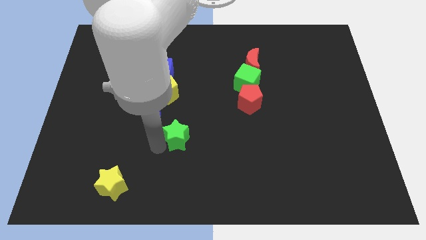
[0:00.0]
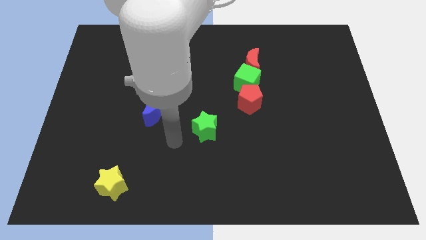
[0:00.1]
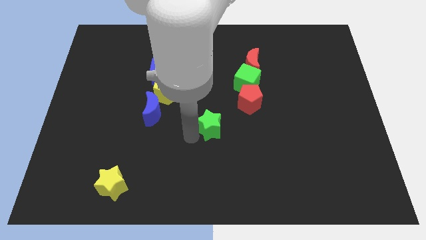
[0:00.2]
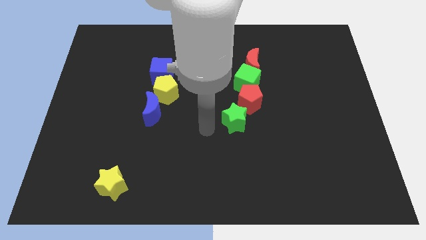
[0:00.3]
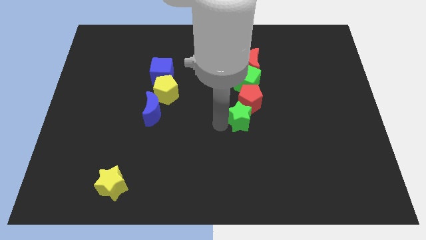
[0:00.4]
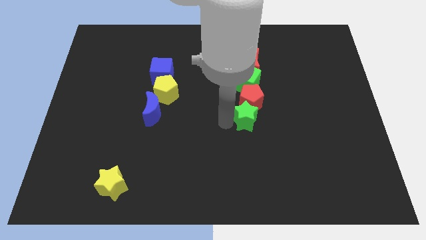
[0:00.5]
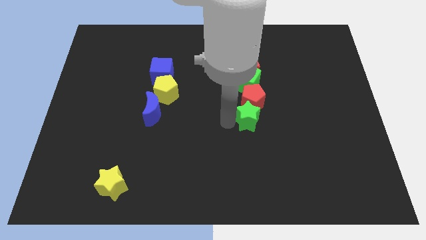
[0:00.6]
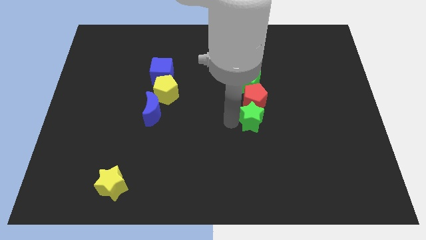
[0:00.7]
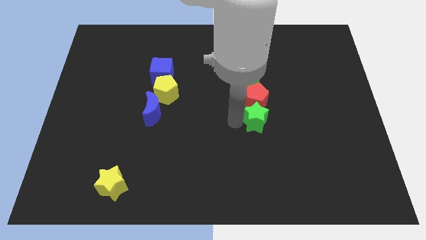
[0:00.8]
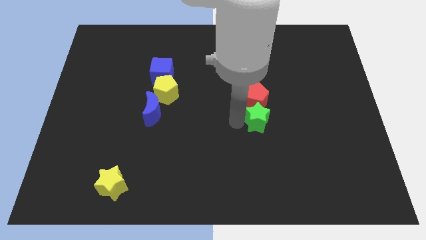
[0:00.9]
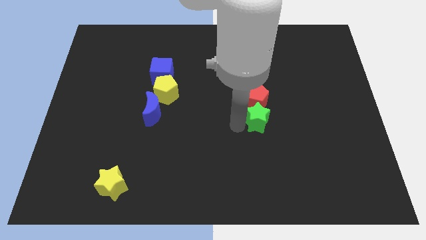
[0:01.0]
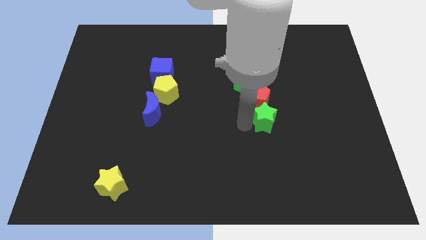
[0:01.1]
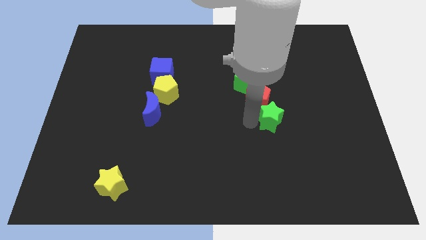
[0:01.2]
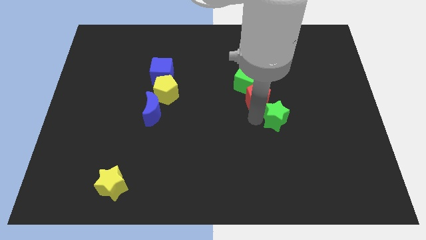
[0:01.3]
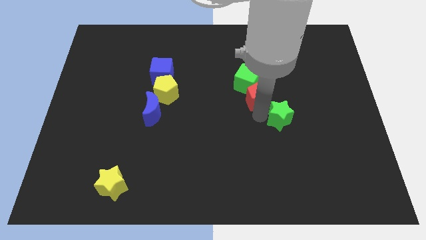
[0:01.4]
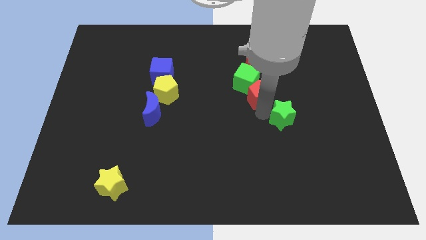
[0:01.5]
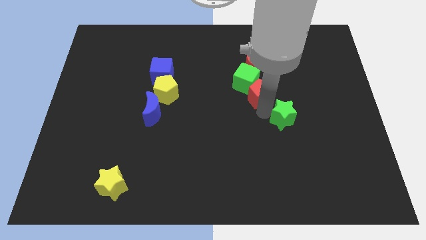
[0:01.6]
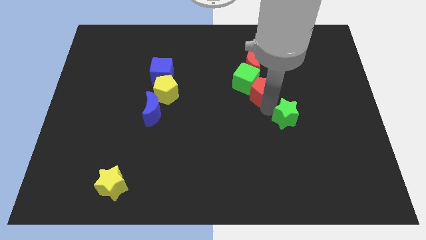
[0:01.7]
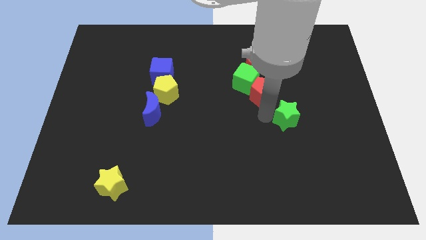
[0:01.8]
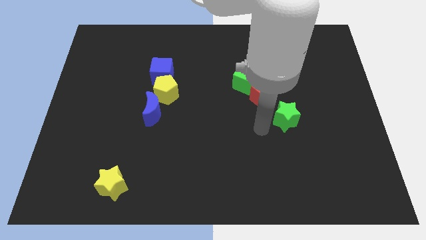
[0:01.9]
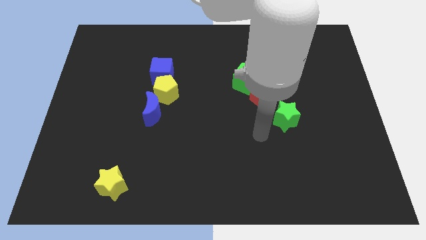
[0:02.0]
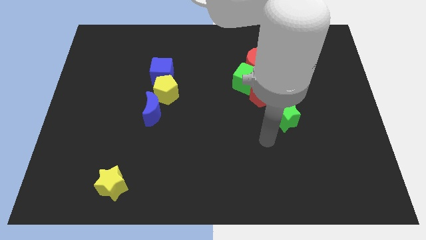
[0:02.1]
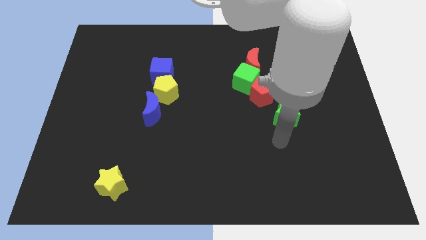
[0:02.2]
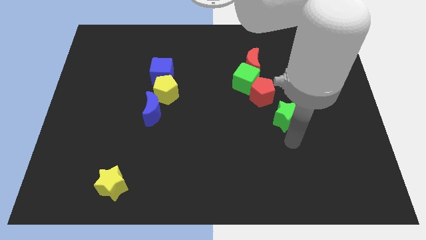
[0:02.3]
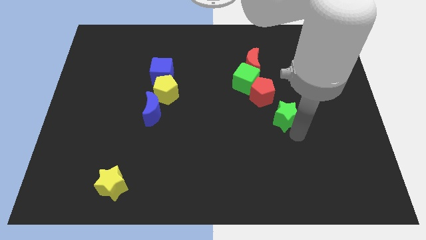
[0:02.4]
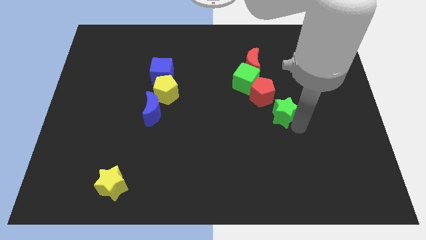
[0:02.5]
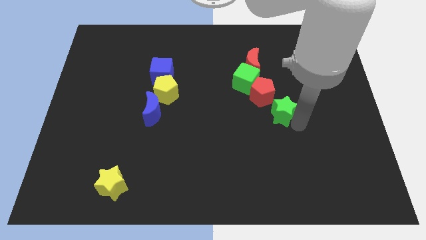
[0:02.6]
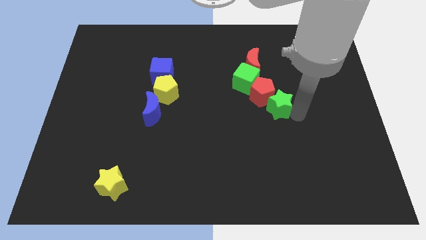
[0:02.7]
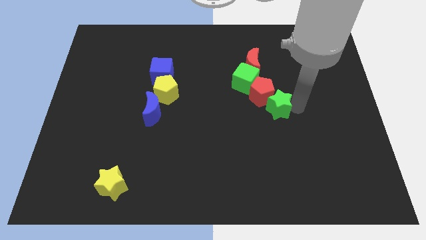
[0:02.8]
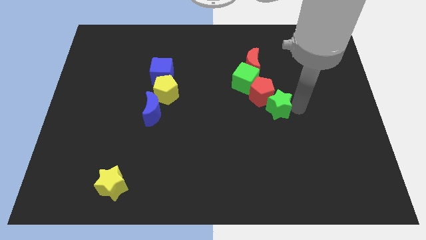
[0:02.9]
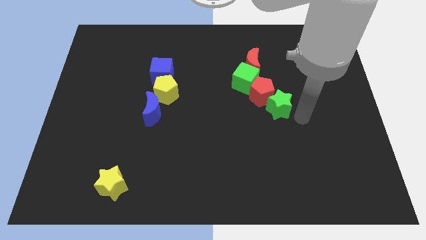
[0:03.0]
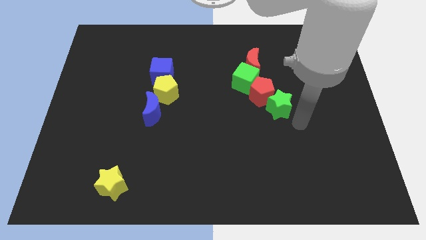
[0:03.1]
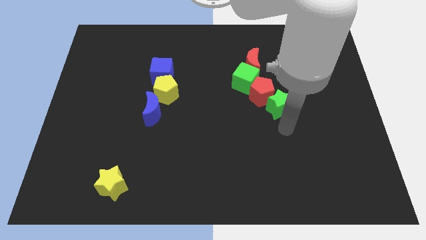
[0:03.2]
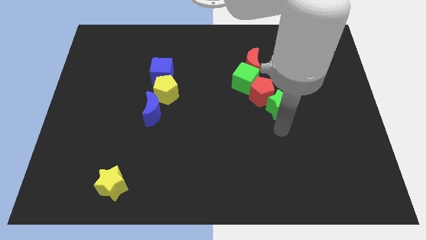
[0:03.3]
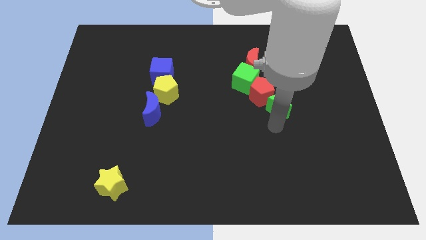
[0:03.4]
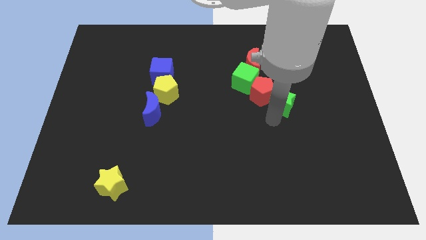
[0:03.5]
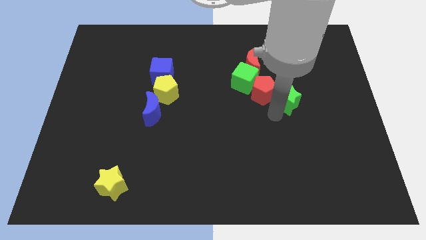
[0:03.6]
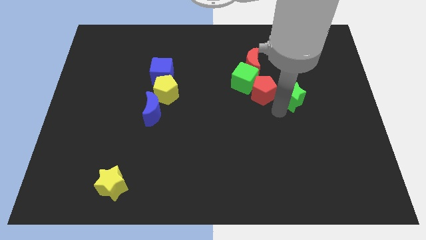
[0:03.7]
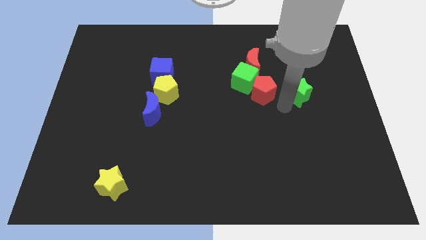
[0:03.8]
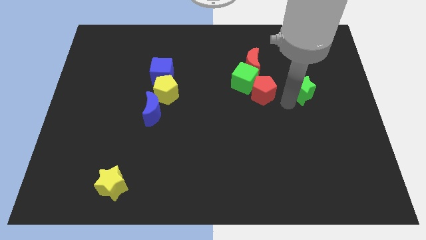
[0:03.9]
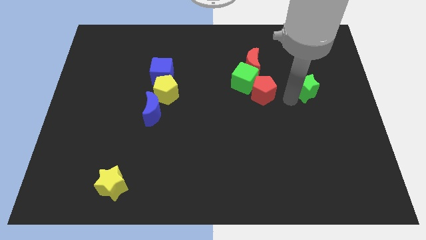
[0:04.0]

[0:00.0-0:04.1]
push the green star to the right of the red pentagon

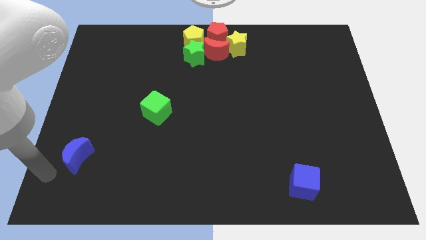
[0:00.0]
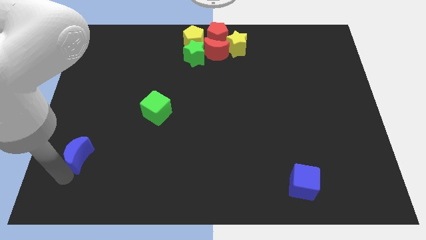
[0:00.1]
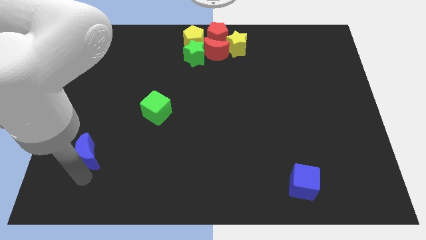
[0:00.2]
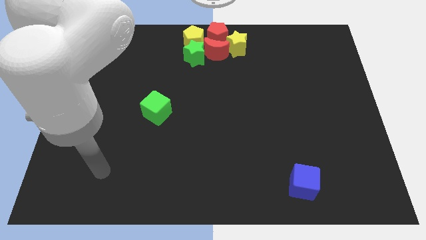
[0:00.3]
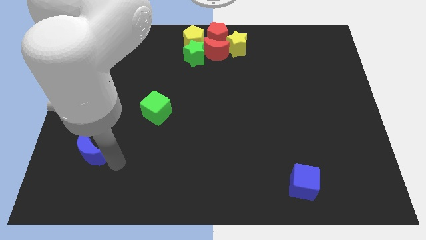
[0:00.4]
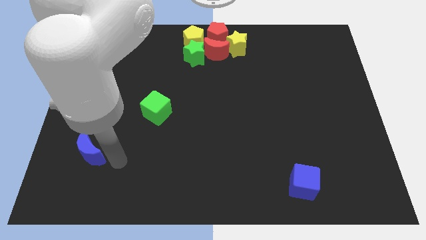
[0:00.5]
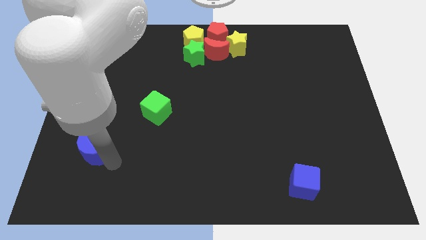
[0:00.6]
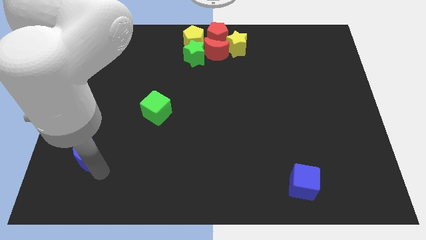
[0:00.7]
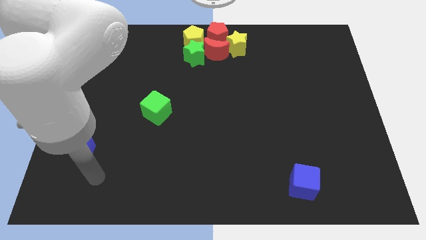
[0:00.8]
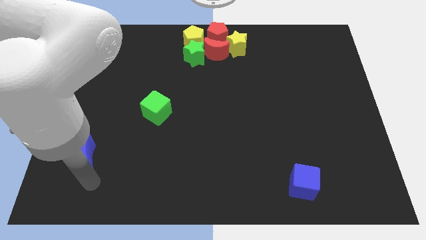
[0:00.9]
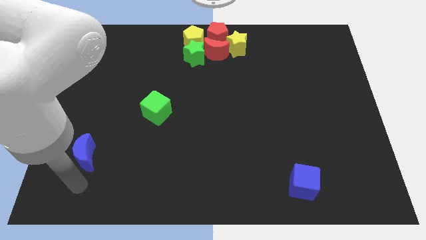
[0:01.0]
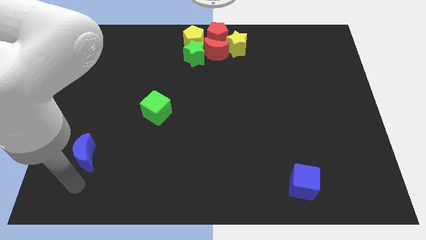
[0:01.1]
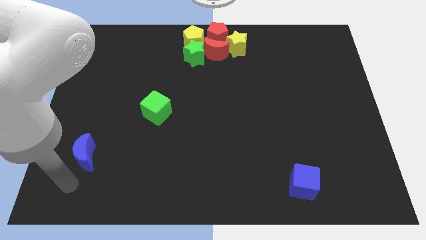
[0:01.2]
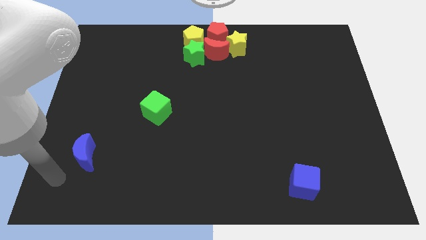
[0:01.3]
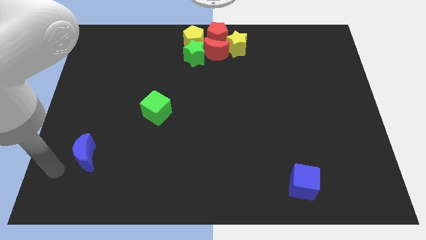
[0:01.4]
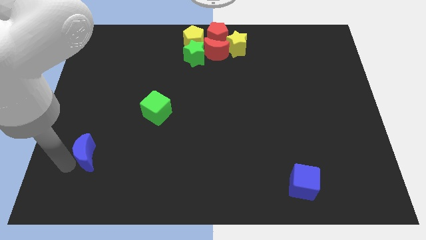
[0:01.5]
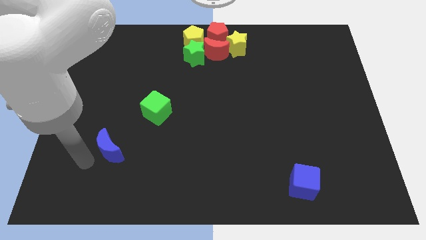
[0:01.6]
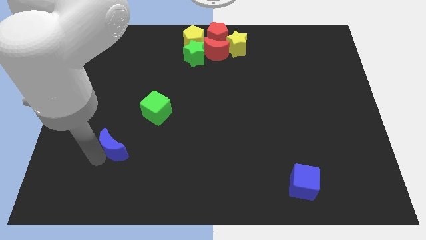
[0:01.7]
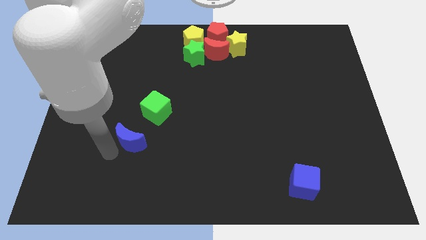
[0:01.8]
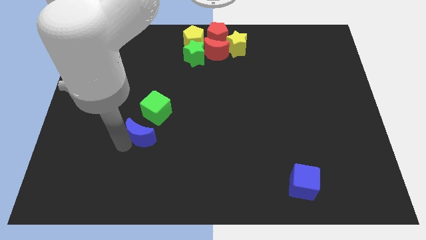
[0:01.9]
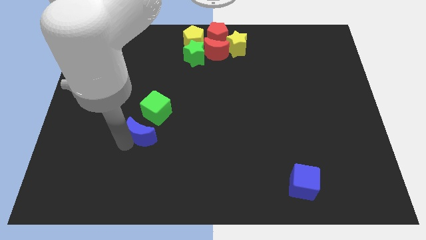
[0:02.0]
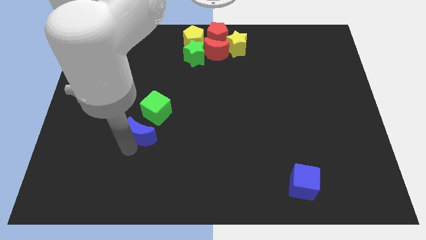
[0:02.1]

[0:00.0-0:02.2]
push blue moon towards green cube

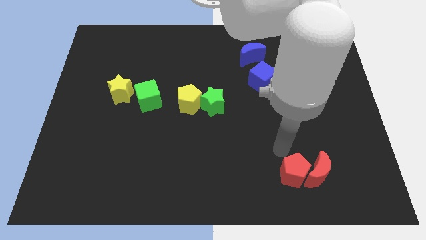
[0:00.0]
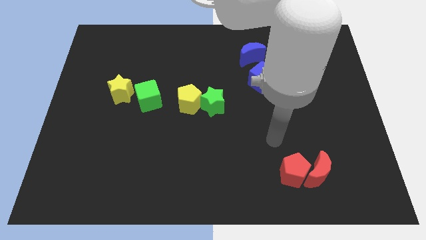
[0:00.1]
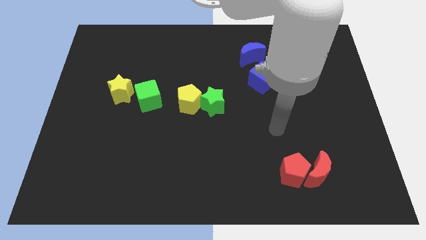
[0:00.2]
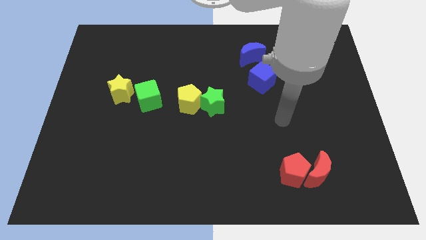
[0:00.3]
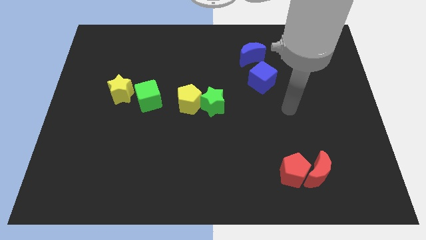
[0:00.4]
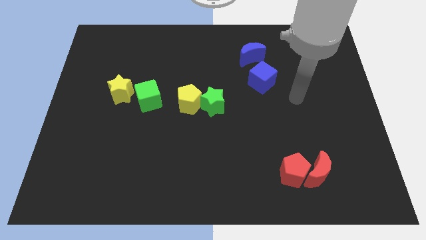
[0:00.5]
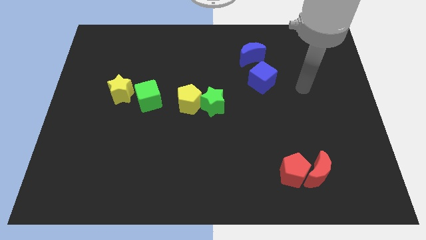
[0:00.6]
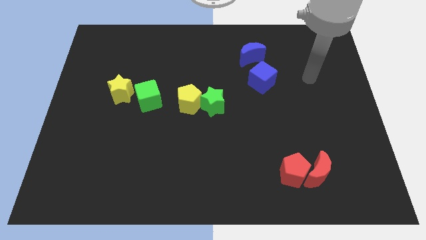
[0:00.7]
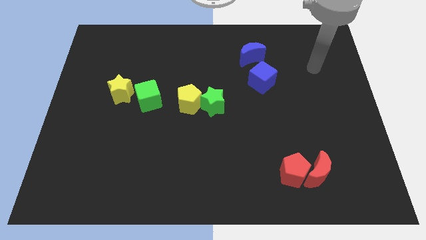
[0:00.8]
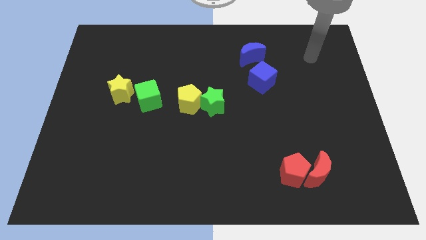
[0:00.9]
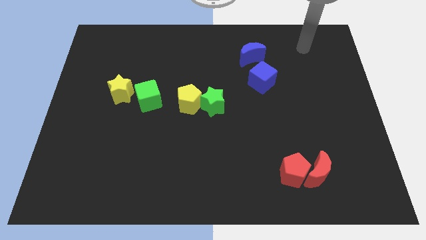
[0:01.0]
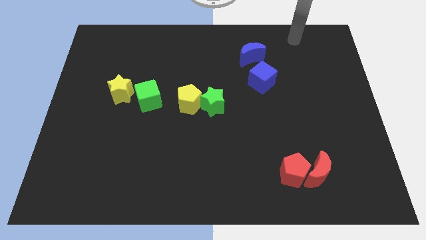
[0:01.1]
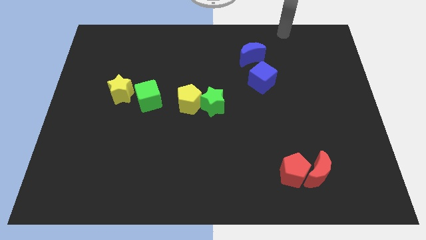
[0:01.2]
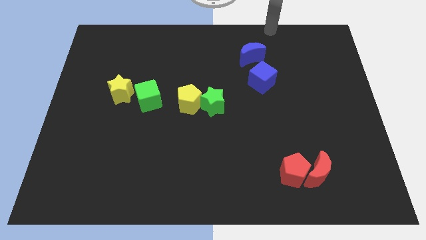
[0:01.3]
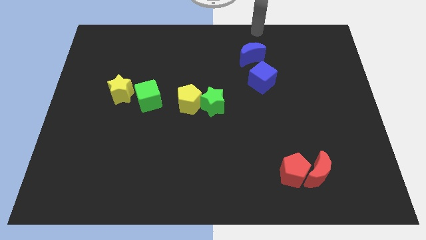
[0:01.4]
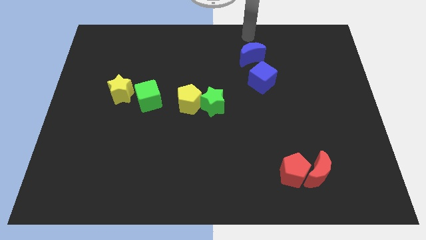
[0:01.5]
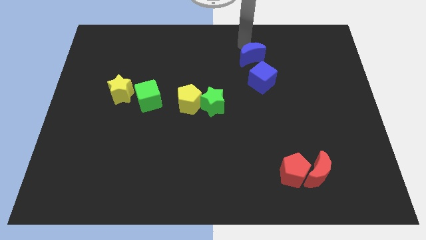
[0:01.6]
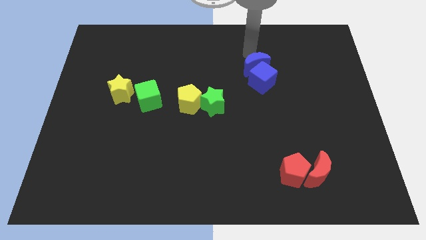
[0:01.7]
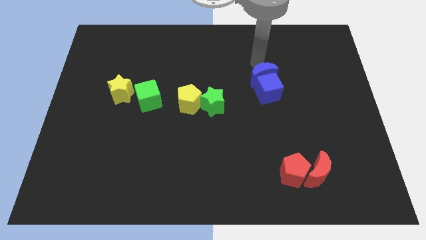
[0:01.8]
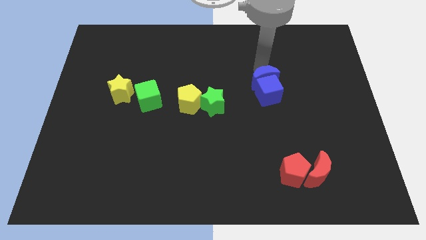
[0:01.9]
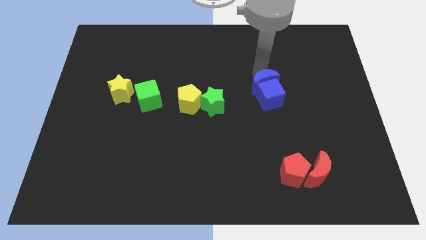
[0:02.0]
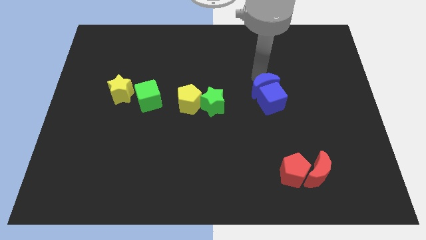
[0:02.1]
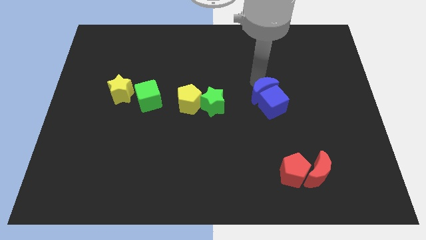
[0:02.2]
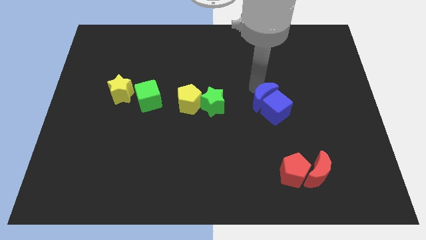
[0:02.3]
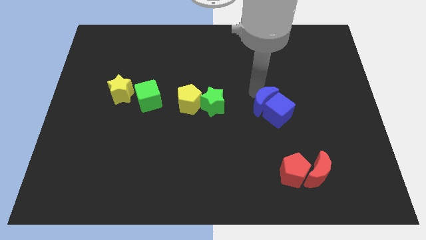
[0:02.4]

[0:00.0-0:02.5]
push the blue blocks towards the red blocks

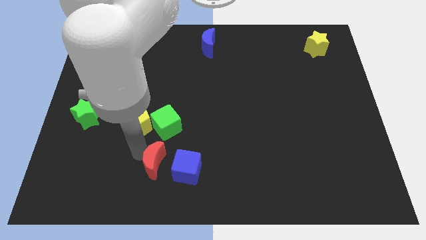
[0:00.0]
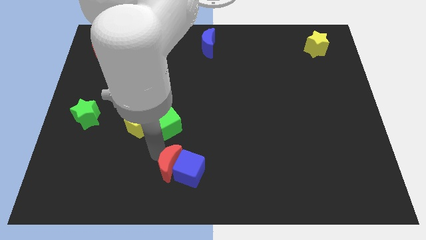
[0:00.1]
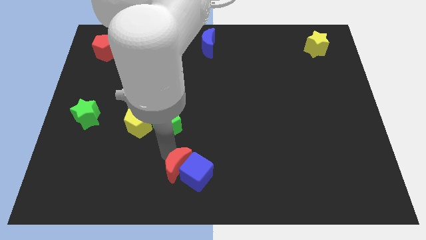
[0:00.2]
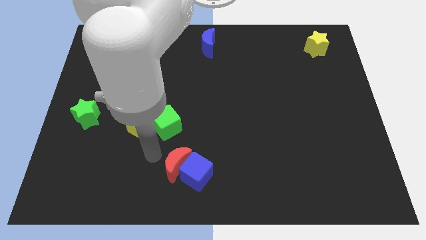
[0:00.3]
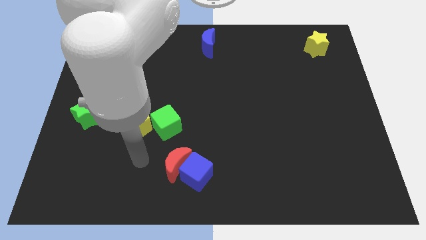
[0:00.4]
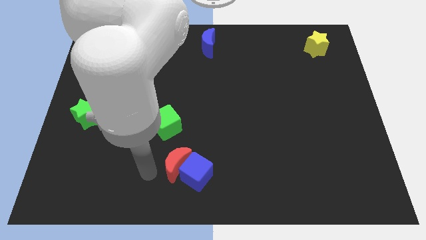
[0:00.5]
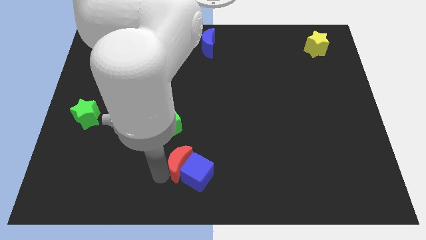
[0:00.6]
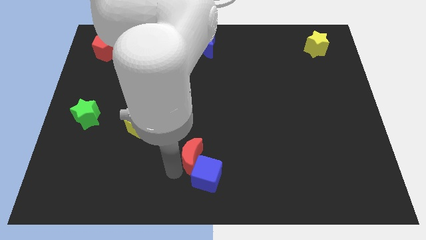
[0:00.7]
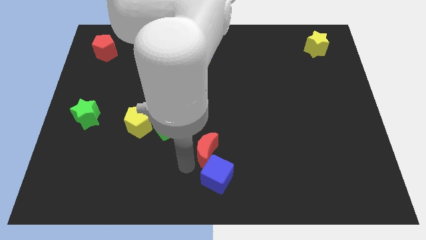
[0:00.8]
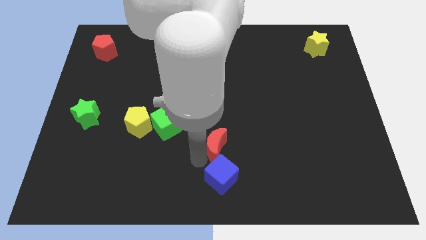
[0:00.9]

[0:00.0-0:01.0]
push red crescent into the blue cube
